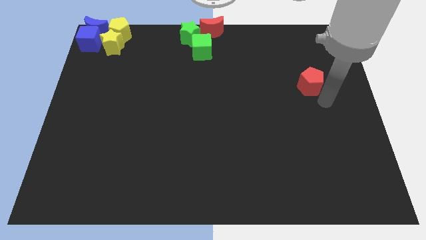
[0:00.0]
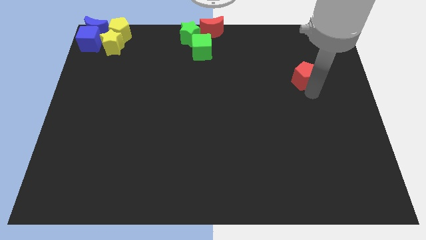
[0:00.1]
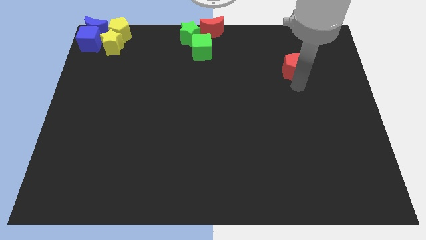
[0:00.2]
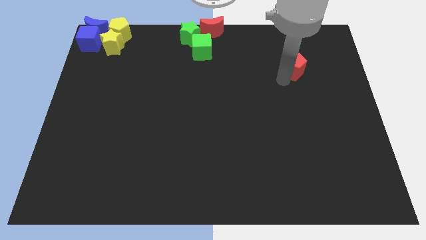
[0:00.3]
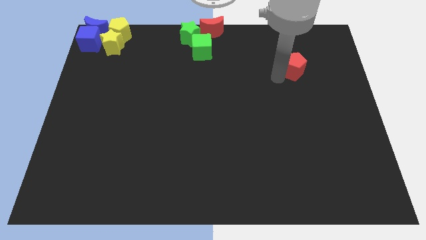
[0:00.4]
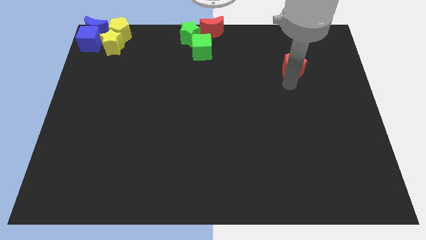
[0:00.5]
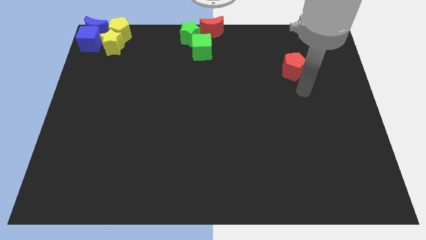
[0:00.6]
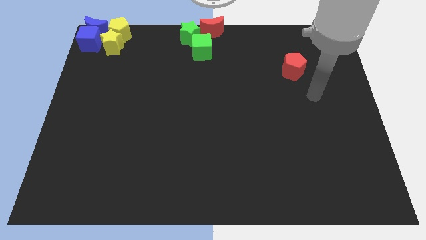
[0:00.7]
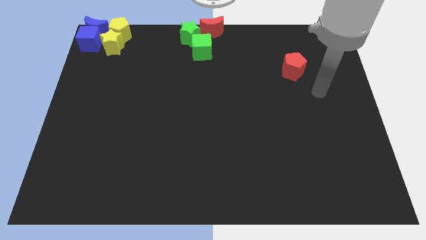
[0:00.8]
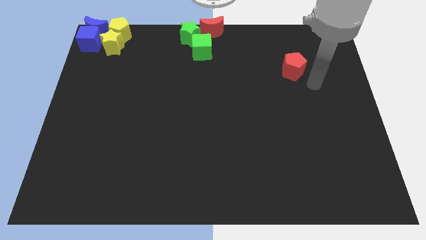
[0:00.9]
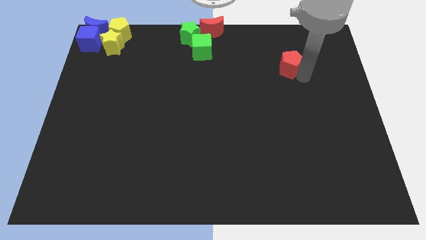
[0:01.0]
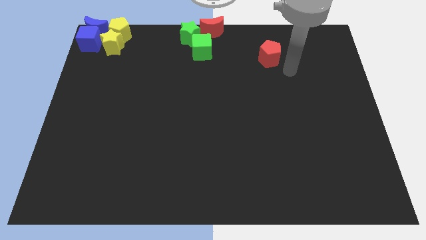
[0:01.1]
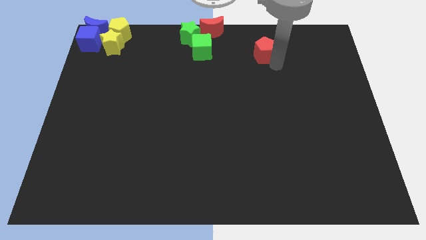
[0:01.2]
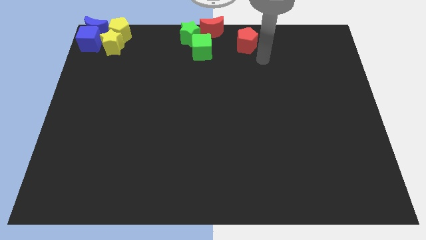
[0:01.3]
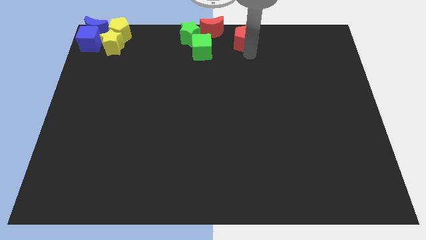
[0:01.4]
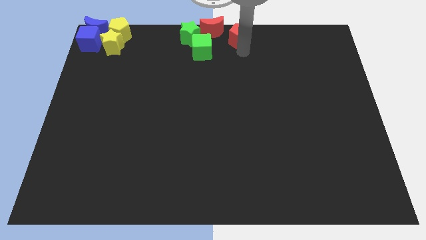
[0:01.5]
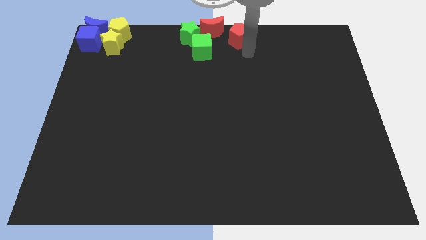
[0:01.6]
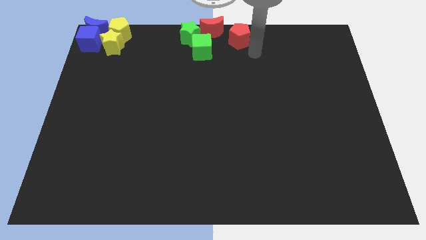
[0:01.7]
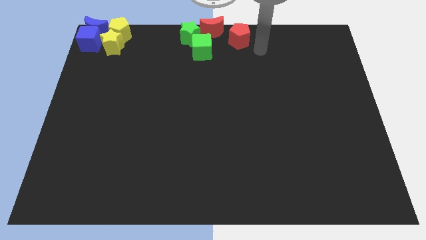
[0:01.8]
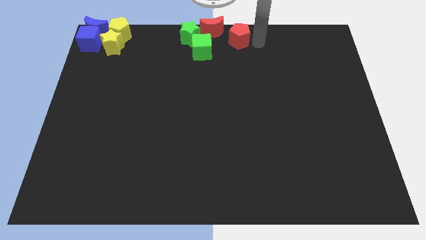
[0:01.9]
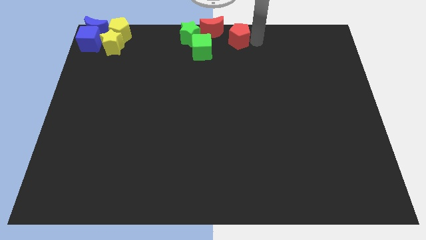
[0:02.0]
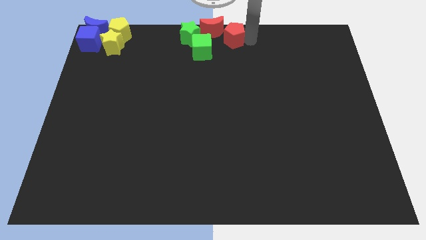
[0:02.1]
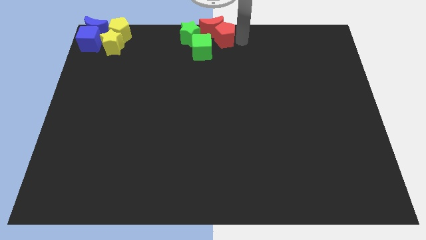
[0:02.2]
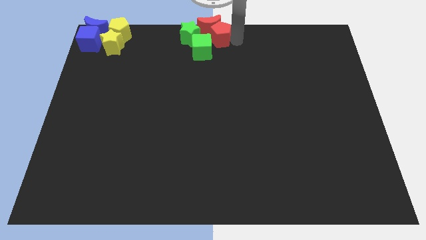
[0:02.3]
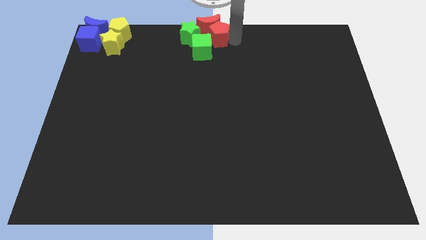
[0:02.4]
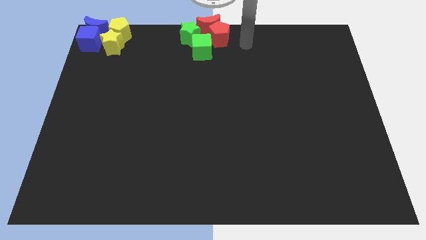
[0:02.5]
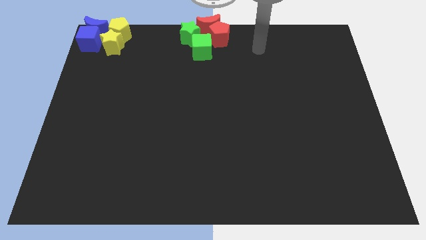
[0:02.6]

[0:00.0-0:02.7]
push the red pentagon into the red moon

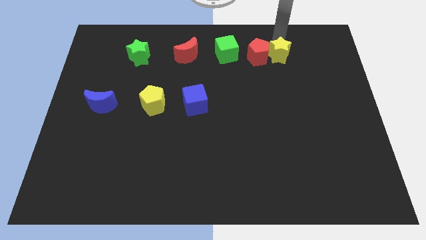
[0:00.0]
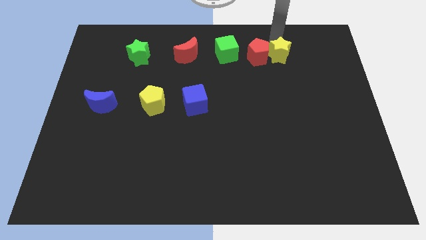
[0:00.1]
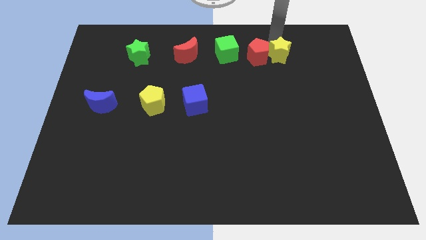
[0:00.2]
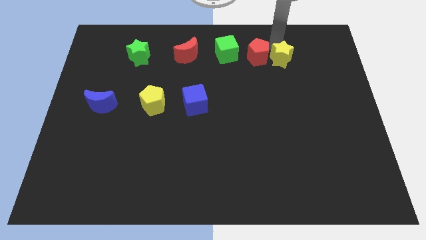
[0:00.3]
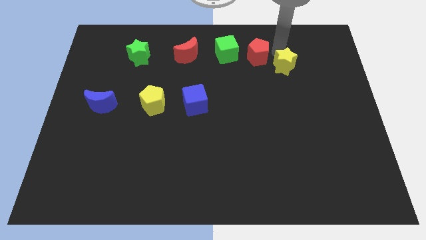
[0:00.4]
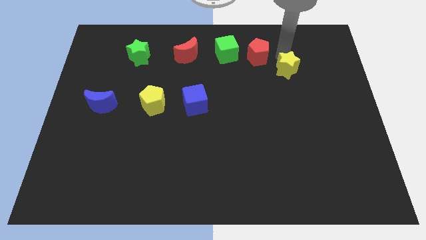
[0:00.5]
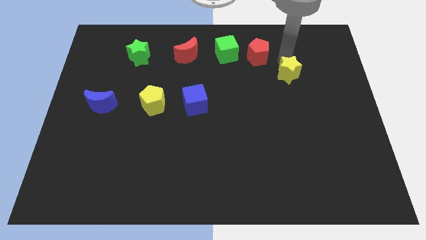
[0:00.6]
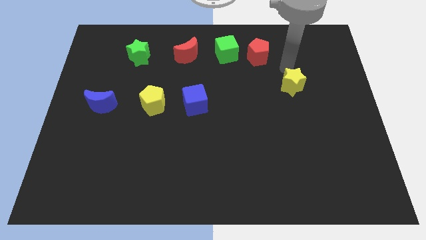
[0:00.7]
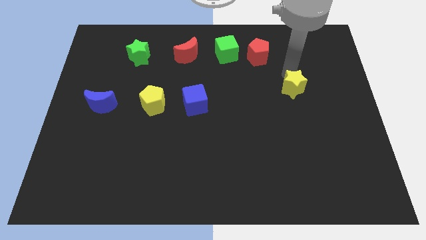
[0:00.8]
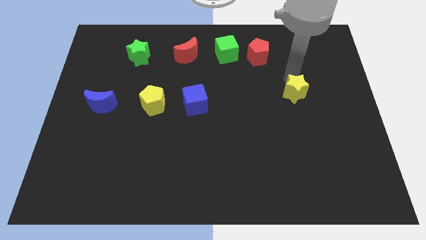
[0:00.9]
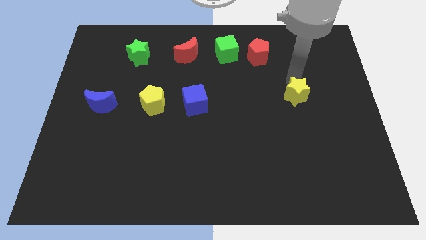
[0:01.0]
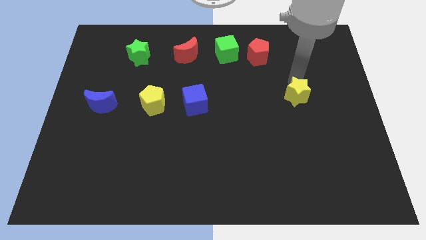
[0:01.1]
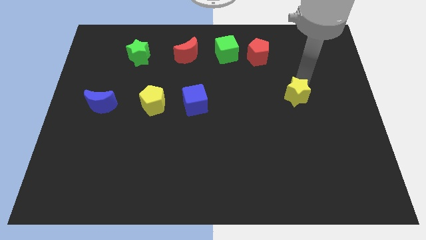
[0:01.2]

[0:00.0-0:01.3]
push the yellow star downwards to the middle of the board

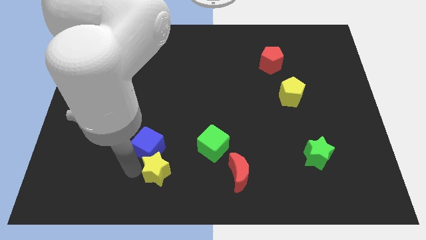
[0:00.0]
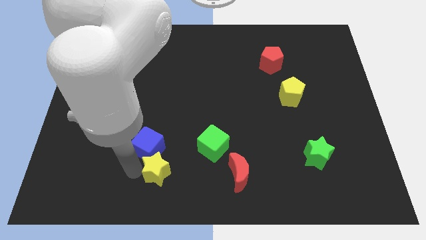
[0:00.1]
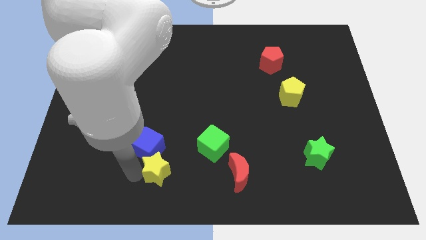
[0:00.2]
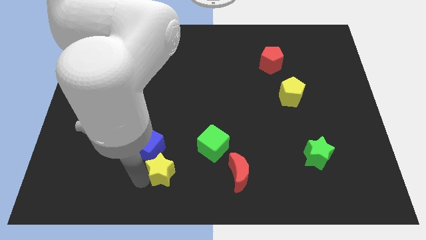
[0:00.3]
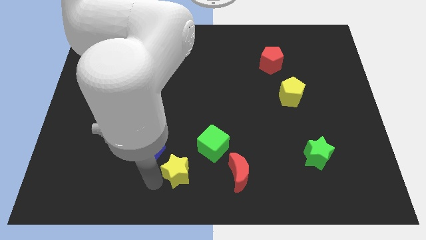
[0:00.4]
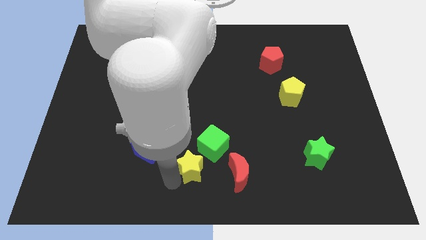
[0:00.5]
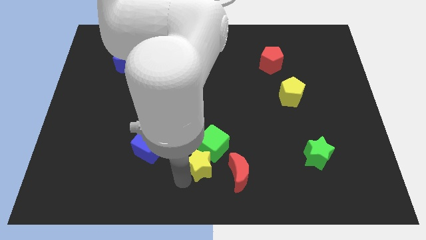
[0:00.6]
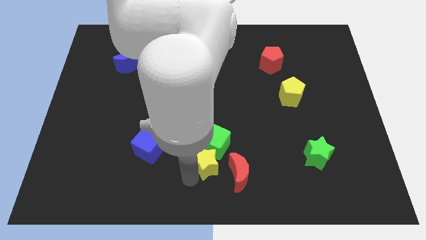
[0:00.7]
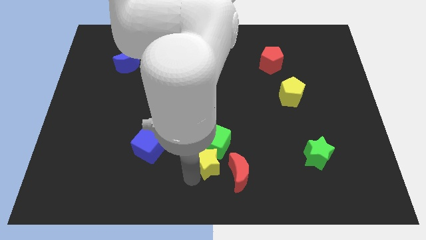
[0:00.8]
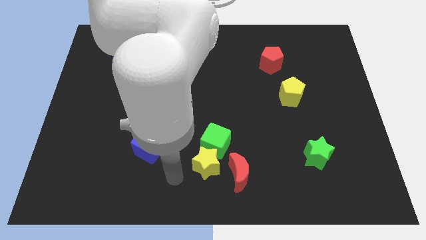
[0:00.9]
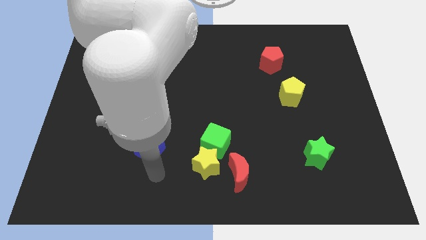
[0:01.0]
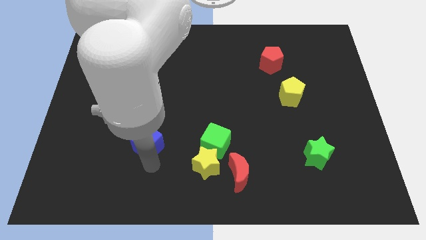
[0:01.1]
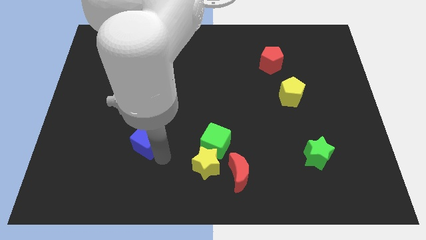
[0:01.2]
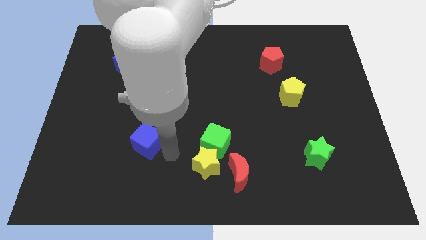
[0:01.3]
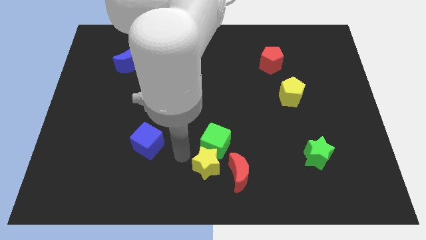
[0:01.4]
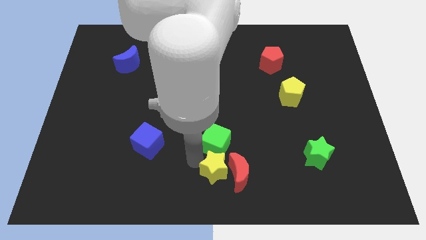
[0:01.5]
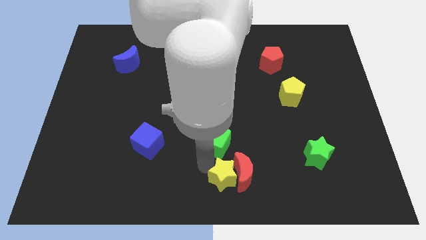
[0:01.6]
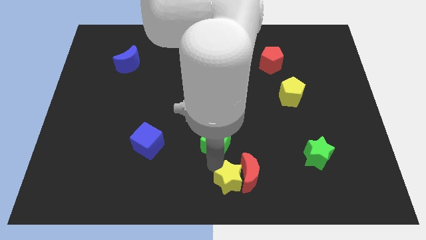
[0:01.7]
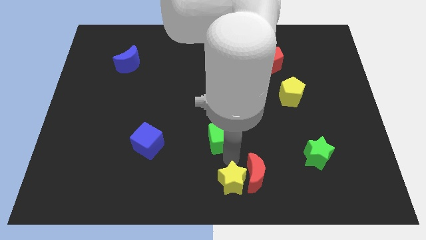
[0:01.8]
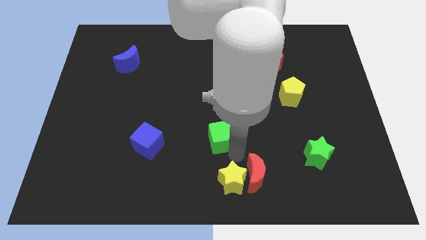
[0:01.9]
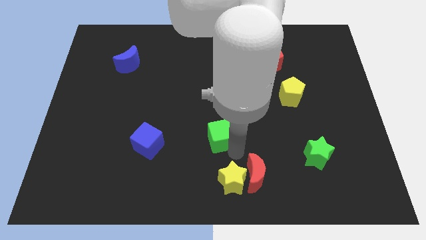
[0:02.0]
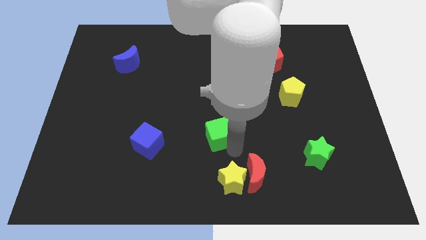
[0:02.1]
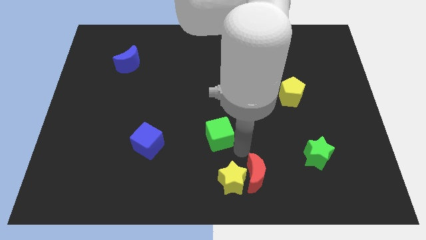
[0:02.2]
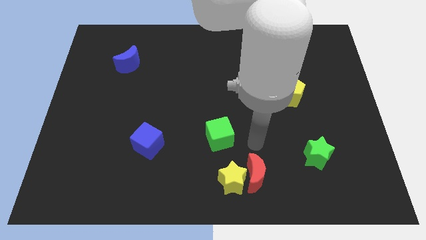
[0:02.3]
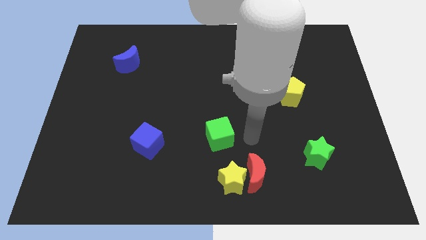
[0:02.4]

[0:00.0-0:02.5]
move yellow star into the red moon

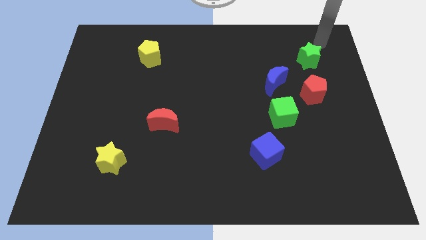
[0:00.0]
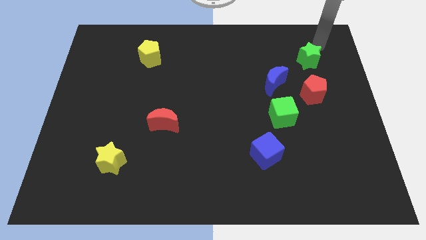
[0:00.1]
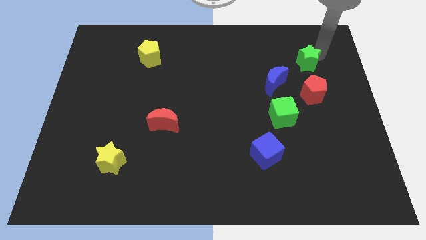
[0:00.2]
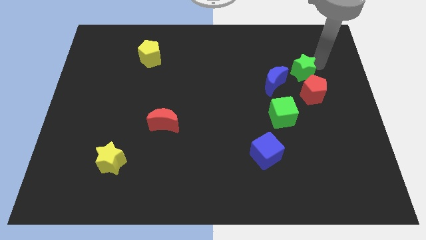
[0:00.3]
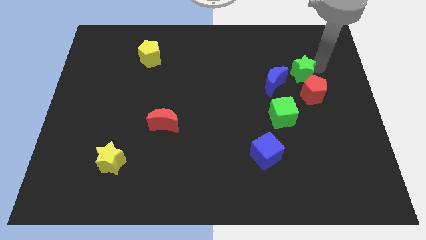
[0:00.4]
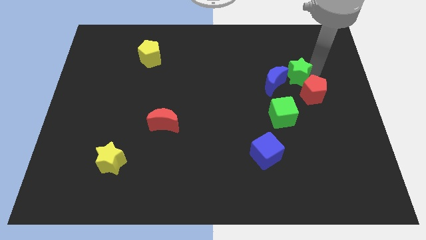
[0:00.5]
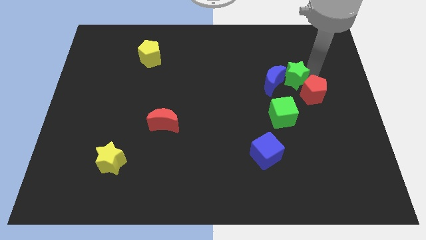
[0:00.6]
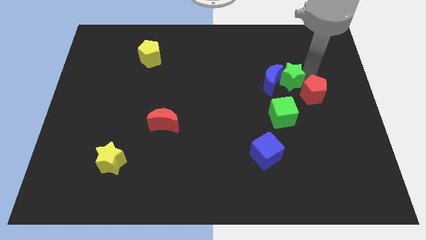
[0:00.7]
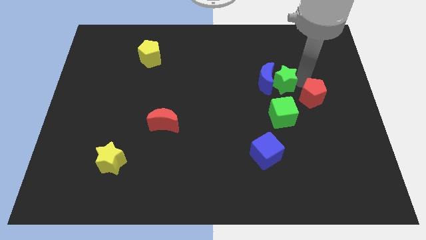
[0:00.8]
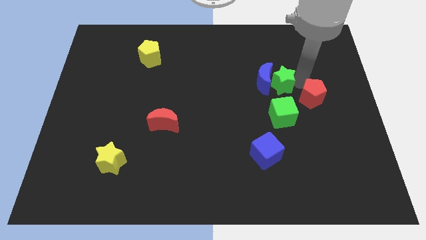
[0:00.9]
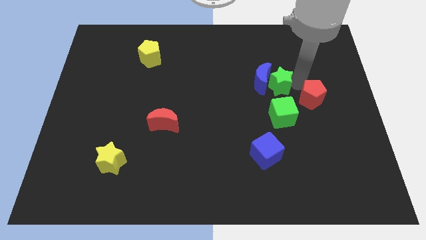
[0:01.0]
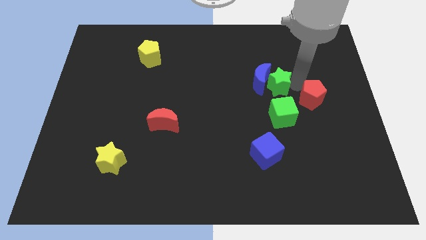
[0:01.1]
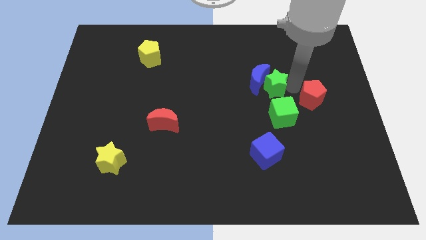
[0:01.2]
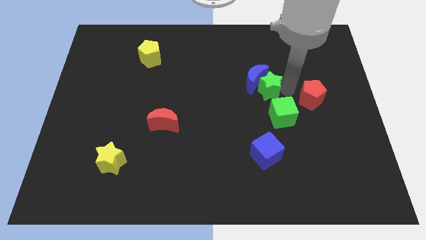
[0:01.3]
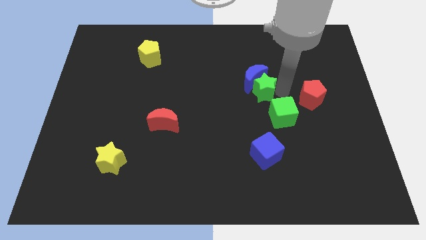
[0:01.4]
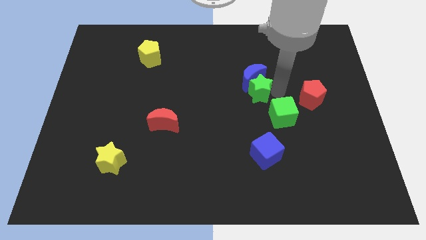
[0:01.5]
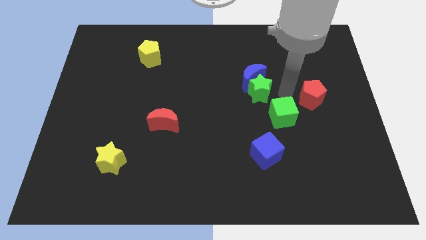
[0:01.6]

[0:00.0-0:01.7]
push the green star into the blue crescent

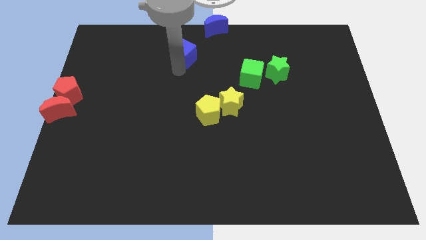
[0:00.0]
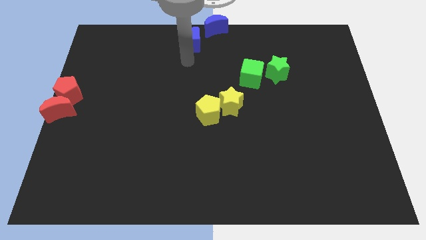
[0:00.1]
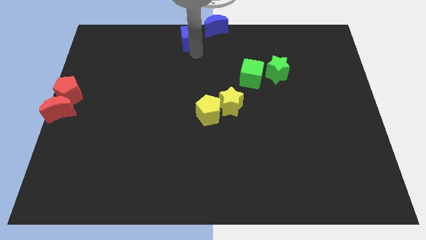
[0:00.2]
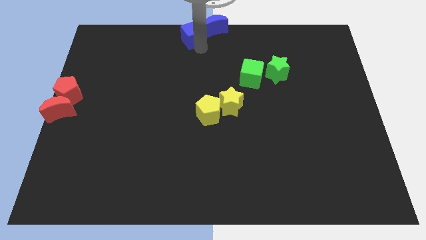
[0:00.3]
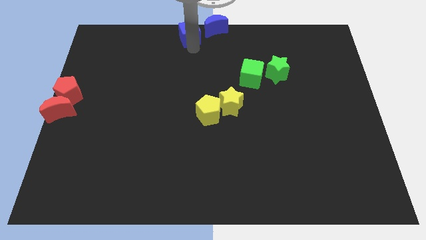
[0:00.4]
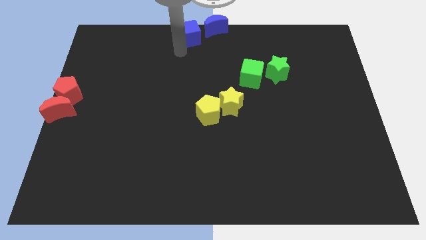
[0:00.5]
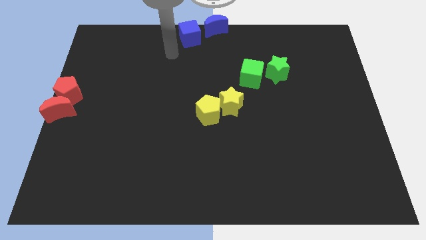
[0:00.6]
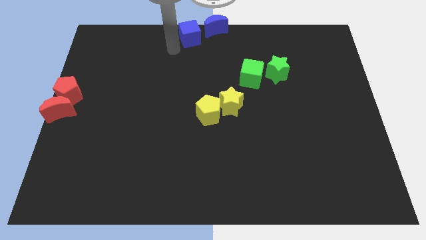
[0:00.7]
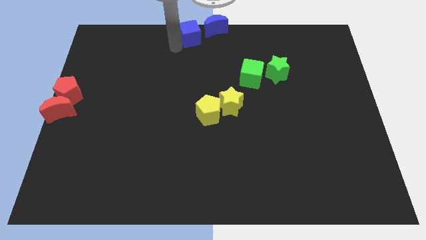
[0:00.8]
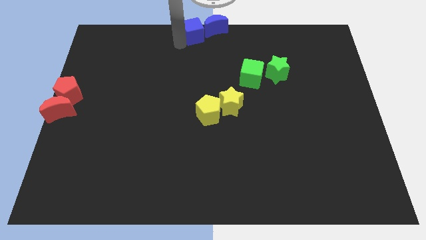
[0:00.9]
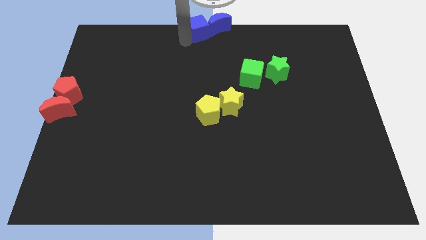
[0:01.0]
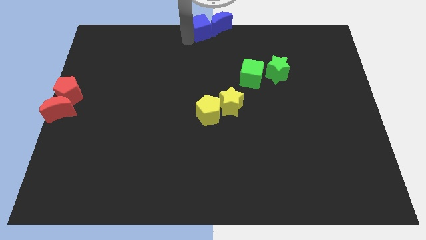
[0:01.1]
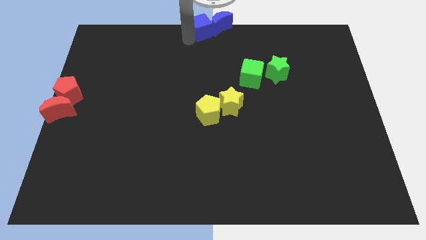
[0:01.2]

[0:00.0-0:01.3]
place blue cube beside blue crescent
